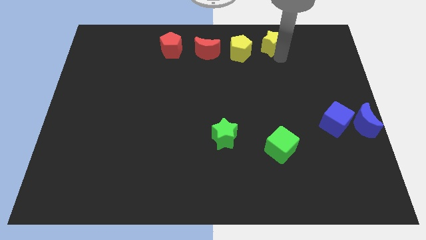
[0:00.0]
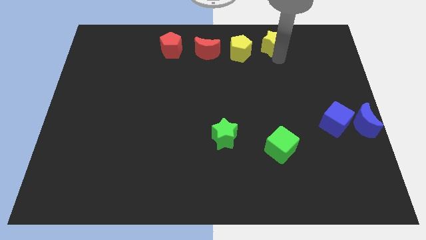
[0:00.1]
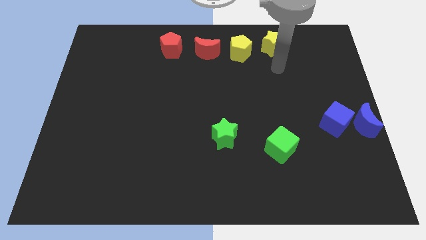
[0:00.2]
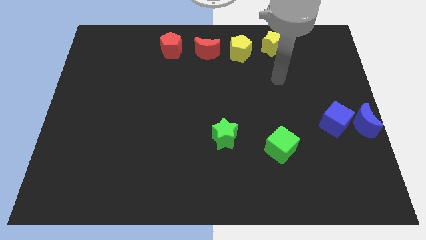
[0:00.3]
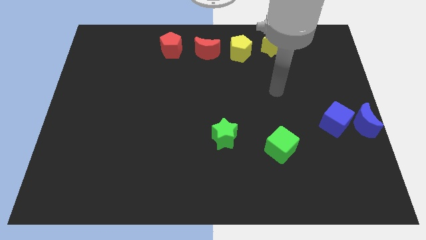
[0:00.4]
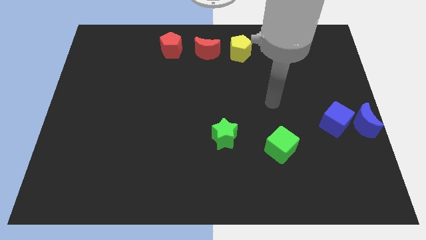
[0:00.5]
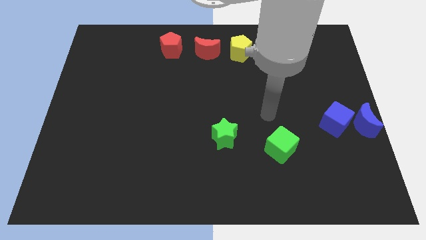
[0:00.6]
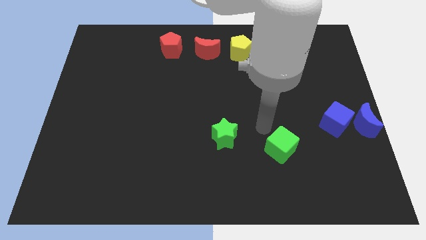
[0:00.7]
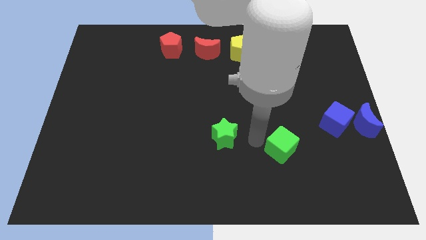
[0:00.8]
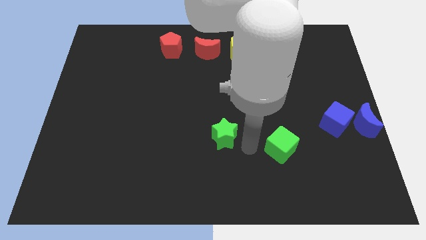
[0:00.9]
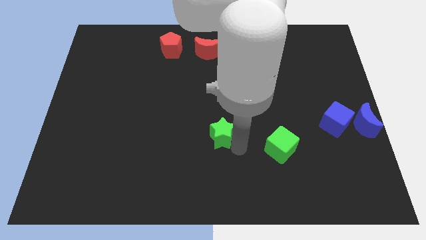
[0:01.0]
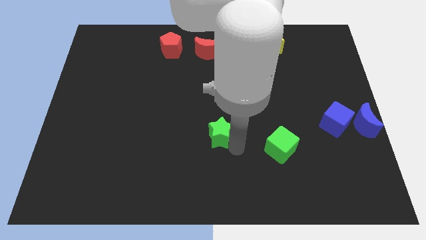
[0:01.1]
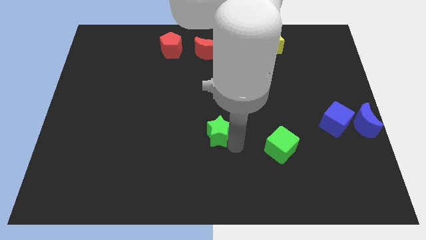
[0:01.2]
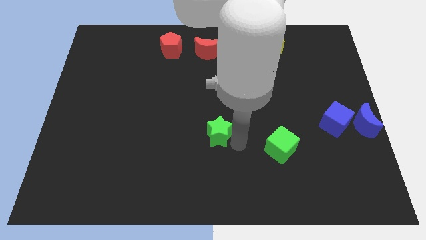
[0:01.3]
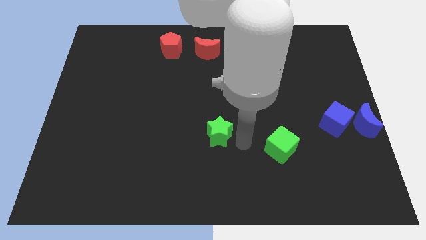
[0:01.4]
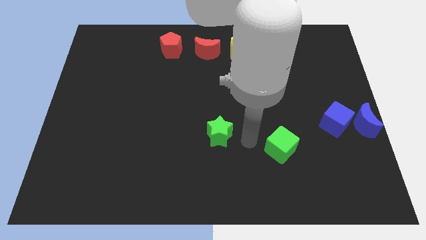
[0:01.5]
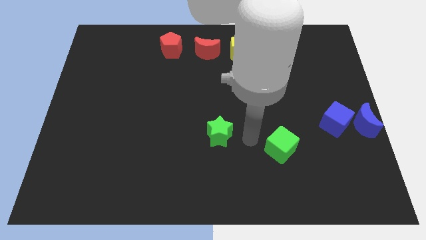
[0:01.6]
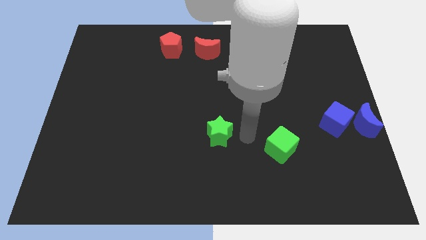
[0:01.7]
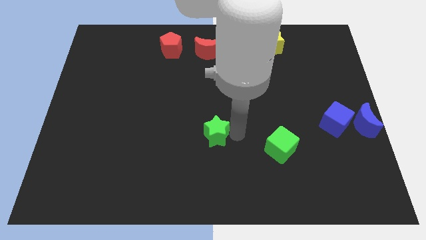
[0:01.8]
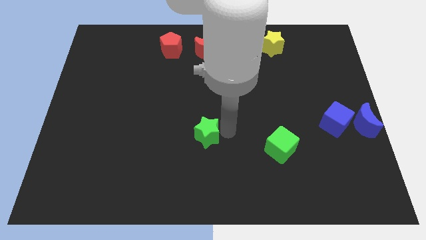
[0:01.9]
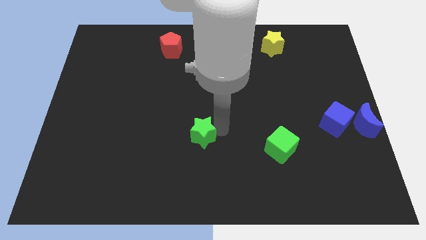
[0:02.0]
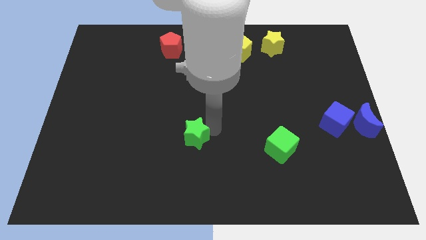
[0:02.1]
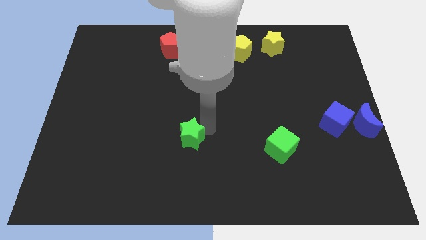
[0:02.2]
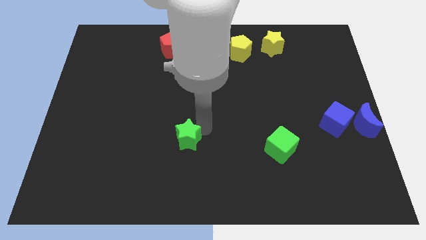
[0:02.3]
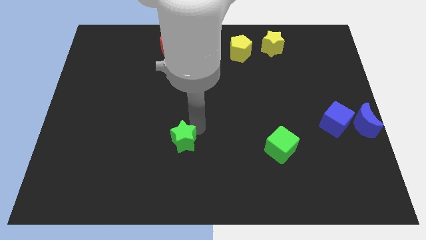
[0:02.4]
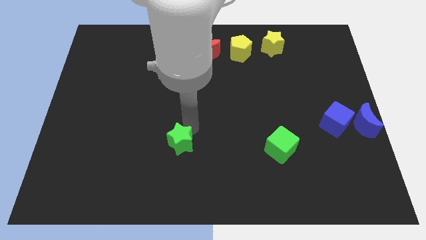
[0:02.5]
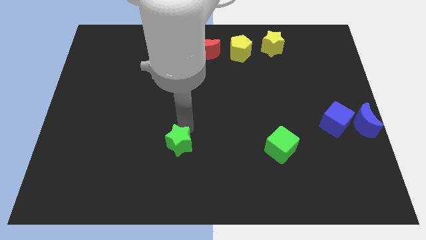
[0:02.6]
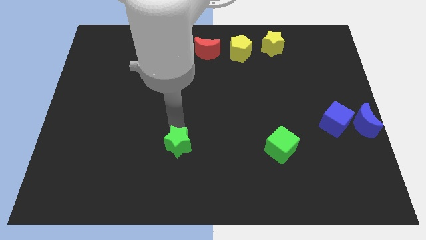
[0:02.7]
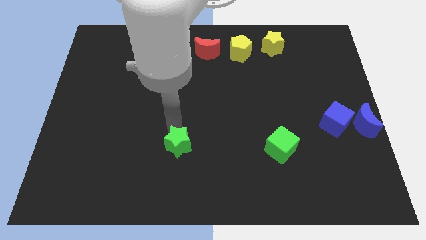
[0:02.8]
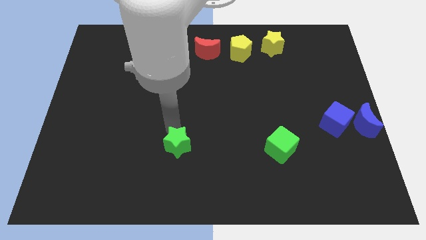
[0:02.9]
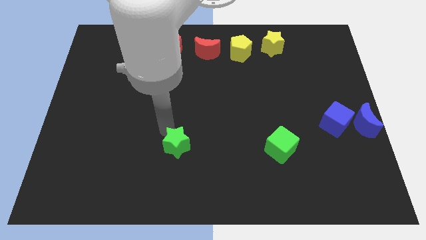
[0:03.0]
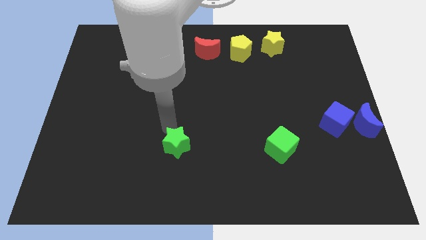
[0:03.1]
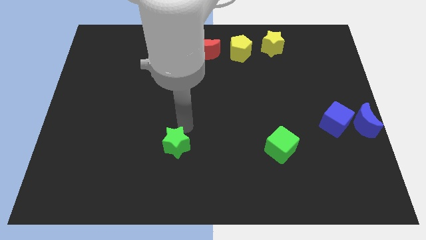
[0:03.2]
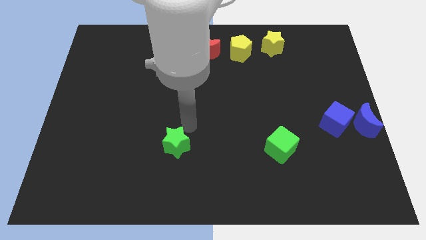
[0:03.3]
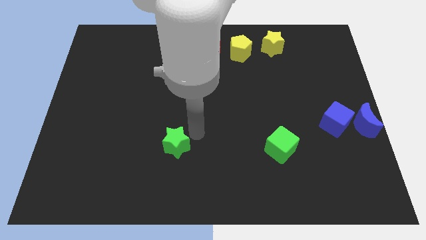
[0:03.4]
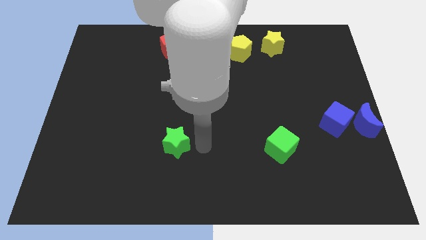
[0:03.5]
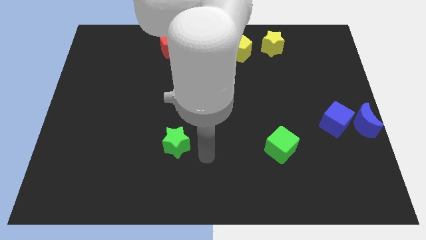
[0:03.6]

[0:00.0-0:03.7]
slide the green star to the left side

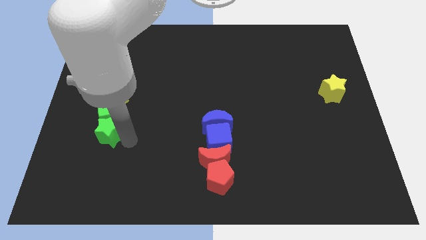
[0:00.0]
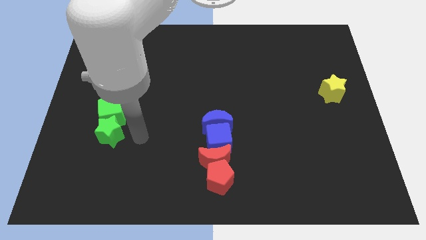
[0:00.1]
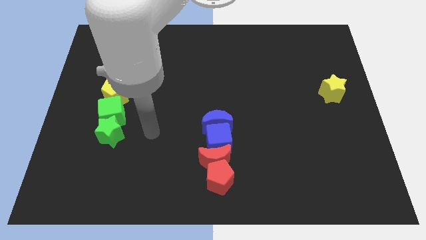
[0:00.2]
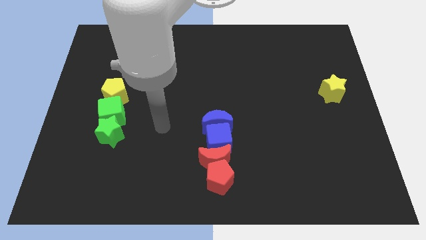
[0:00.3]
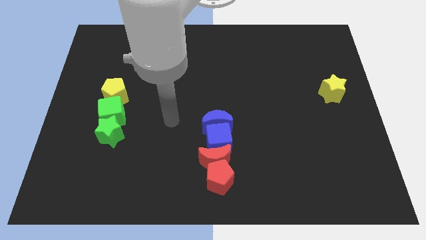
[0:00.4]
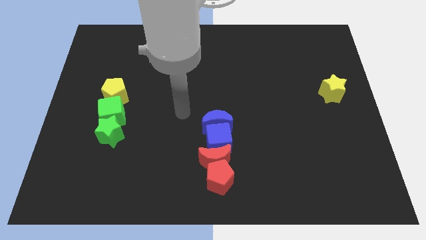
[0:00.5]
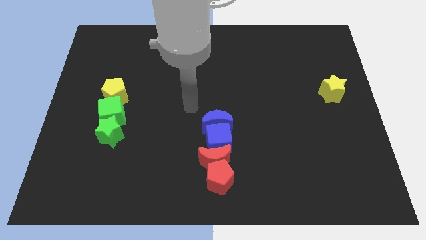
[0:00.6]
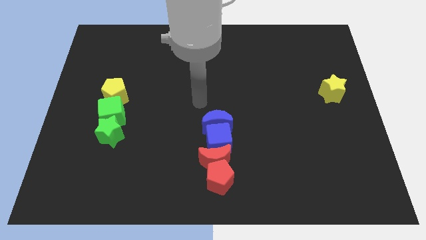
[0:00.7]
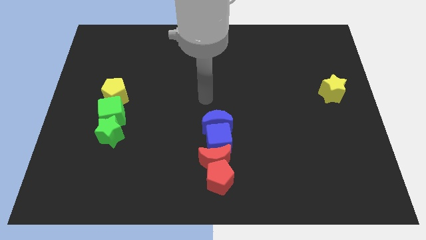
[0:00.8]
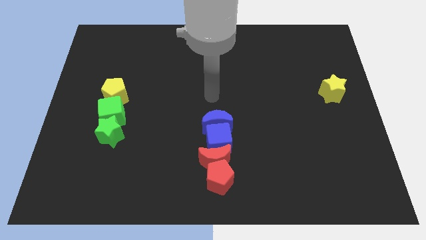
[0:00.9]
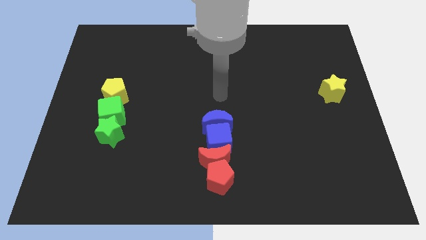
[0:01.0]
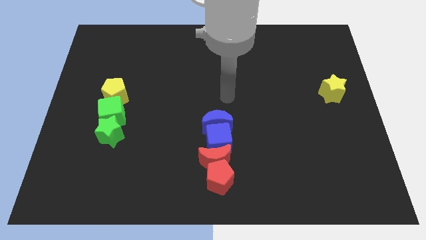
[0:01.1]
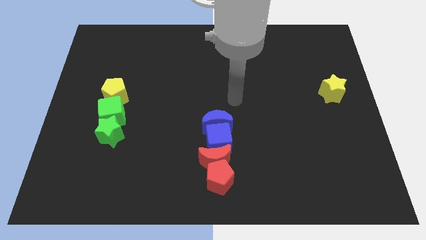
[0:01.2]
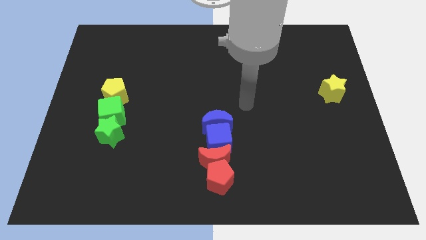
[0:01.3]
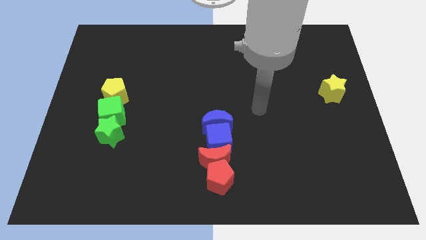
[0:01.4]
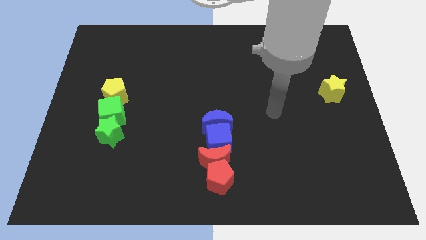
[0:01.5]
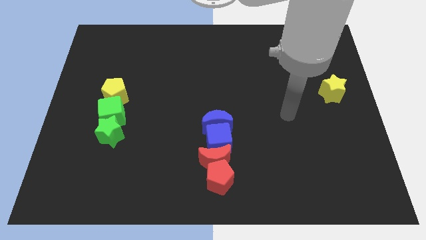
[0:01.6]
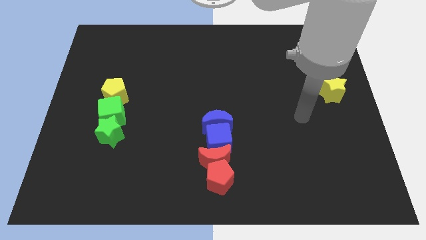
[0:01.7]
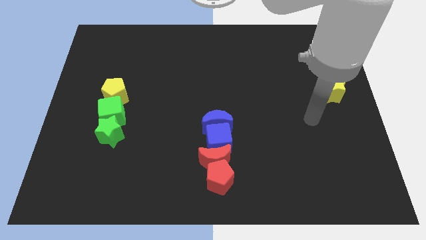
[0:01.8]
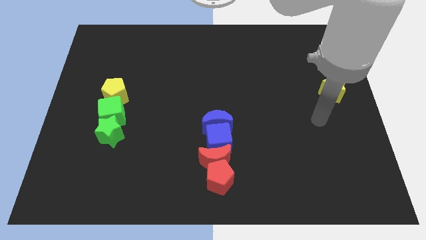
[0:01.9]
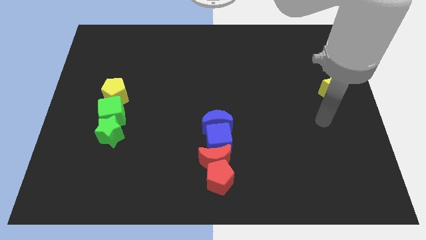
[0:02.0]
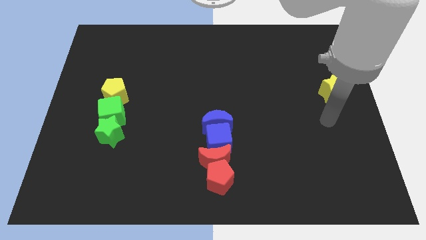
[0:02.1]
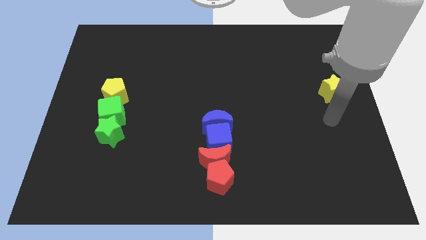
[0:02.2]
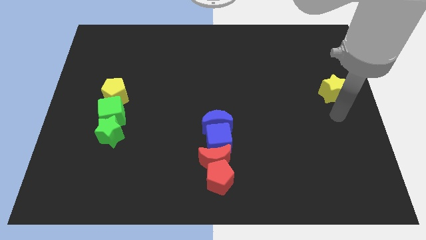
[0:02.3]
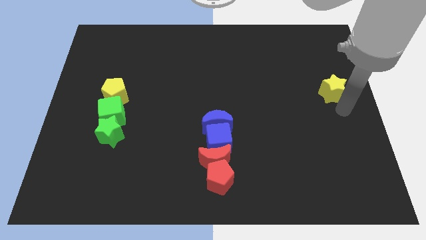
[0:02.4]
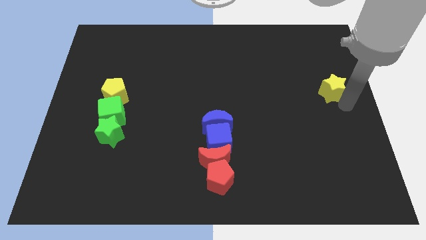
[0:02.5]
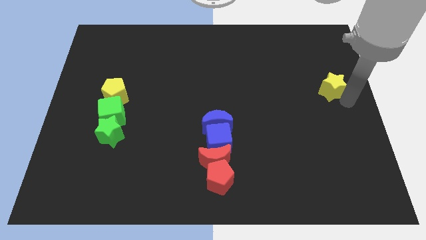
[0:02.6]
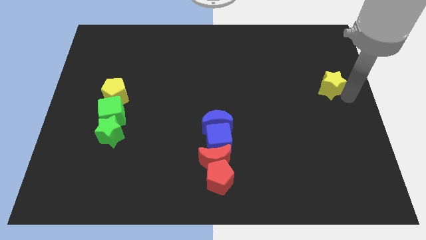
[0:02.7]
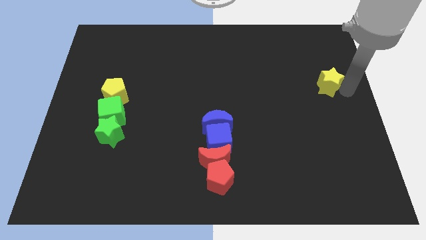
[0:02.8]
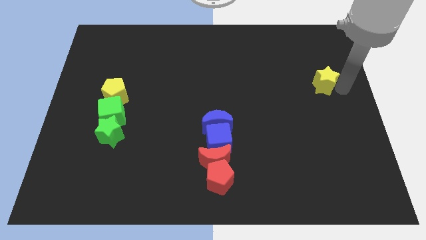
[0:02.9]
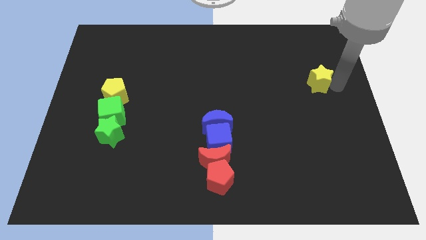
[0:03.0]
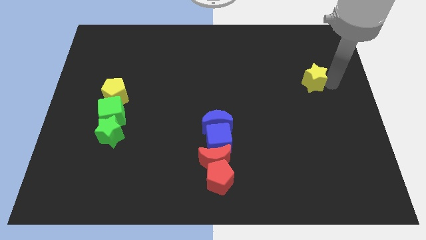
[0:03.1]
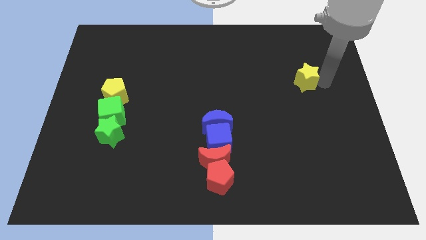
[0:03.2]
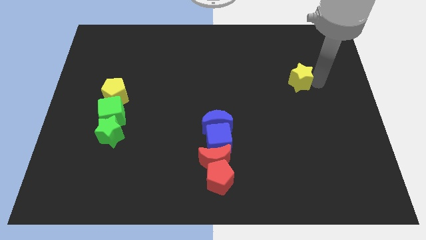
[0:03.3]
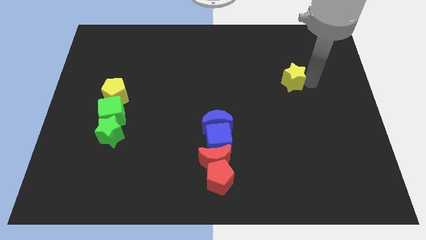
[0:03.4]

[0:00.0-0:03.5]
place your arm to the bottom of yellow star

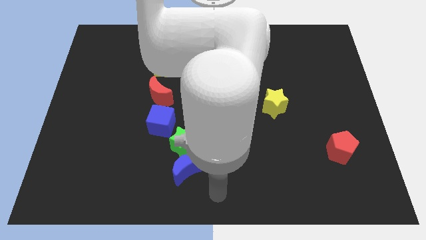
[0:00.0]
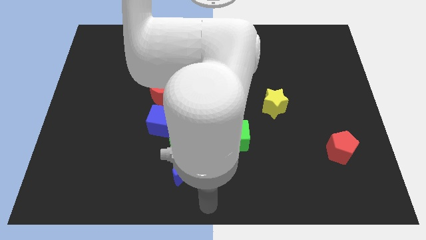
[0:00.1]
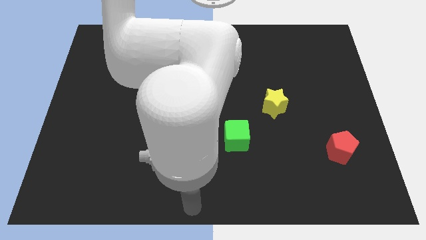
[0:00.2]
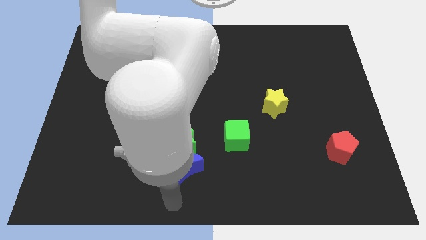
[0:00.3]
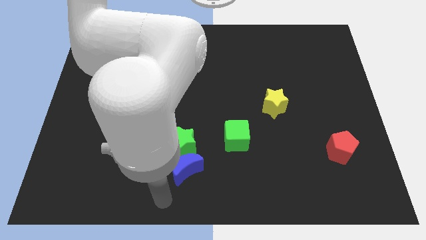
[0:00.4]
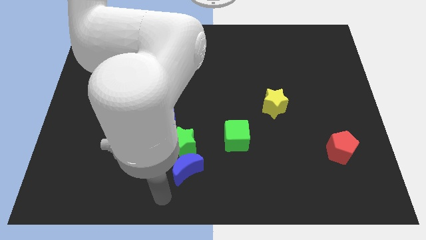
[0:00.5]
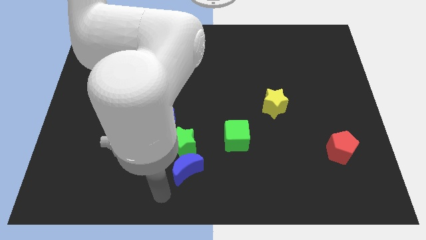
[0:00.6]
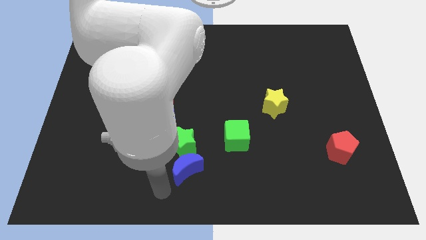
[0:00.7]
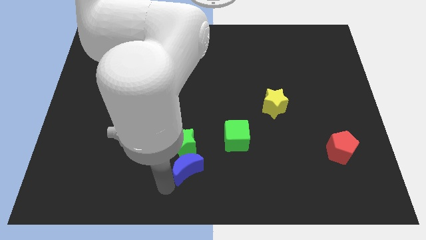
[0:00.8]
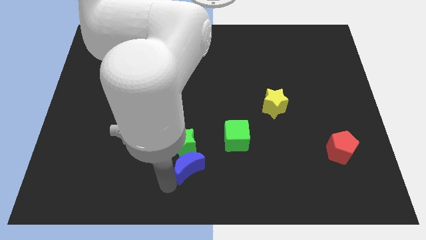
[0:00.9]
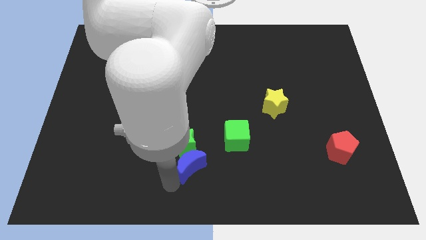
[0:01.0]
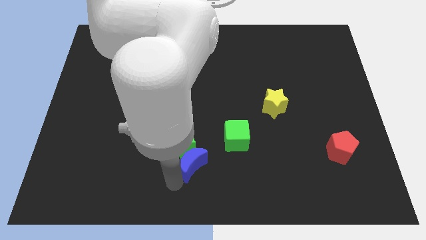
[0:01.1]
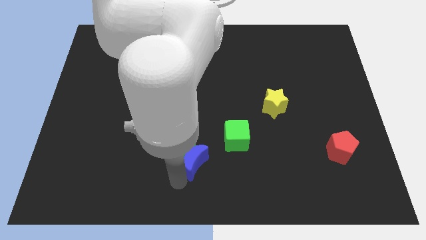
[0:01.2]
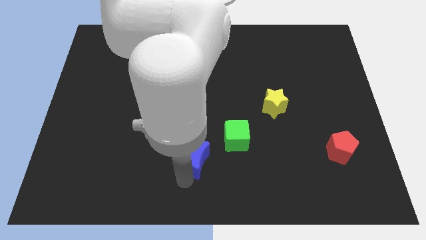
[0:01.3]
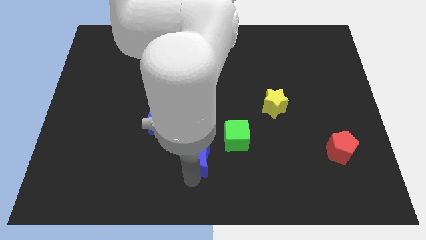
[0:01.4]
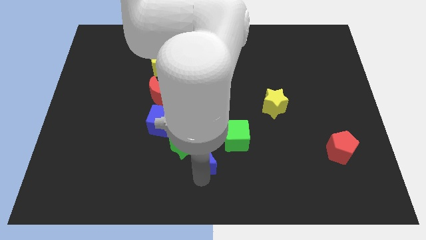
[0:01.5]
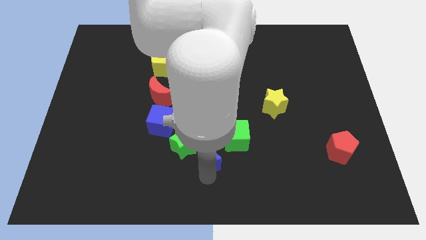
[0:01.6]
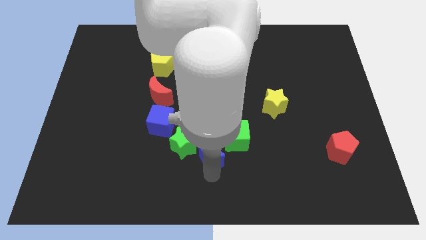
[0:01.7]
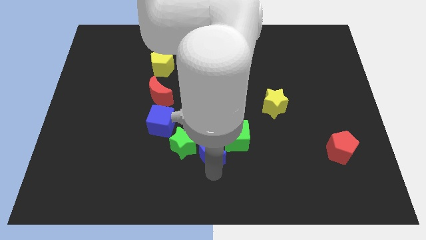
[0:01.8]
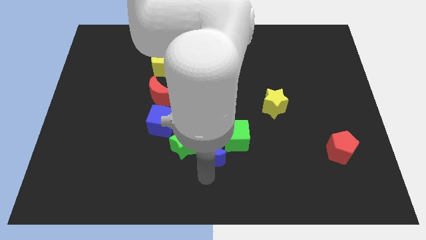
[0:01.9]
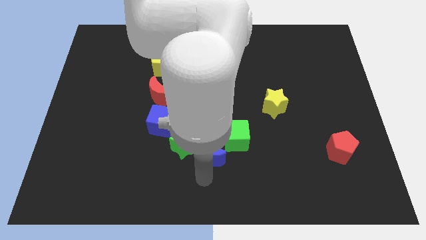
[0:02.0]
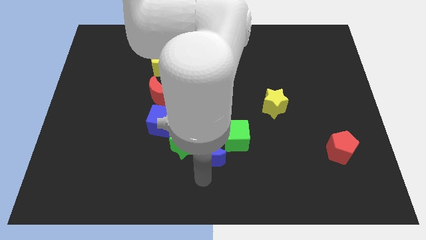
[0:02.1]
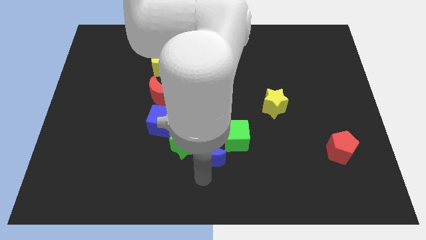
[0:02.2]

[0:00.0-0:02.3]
push the blue crescent to the right of the green star
